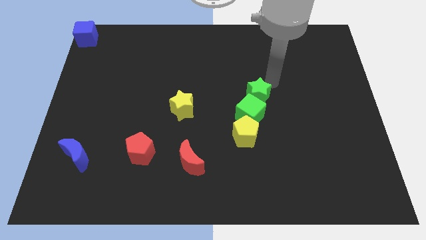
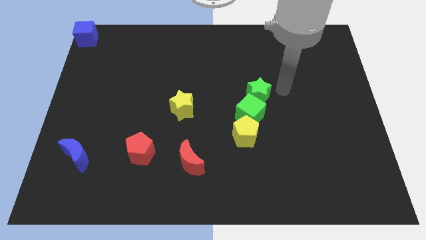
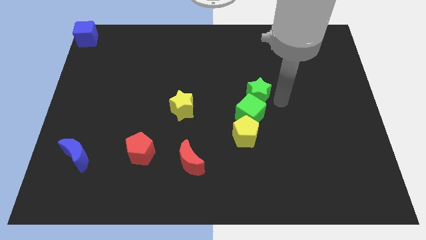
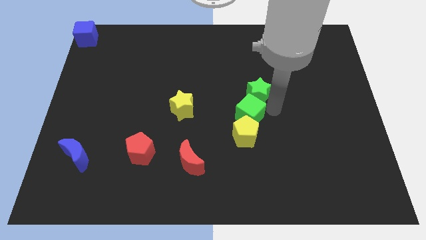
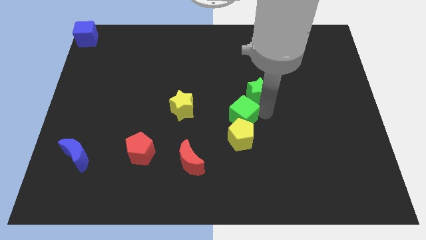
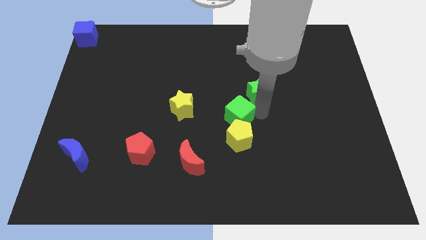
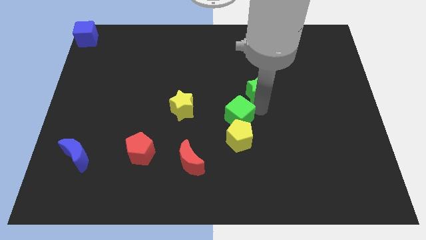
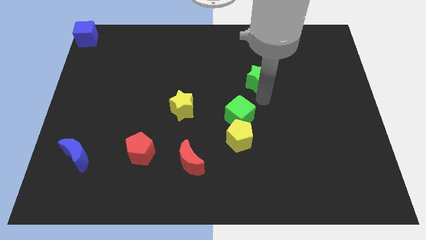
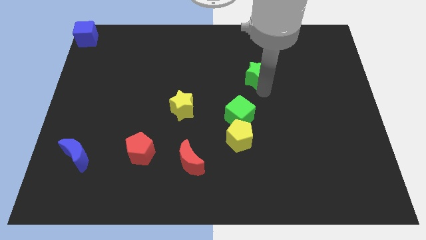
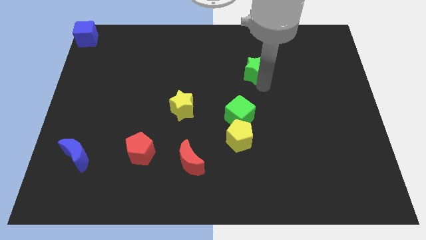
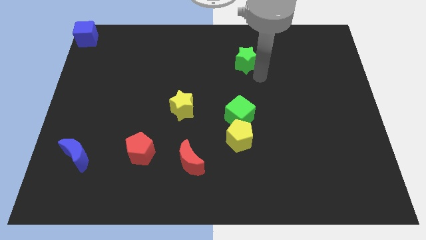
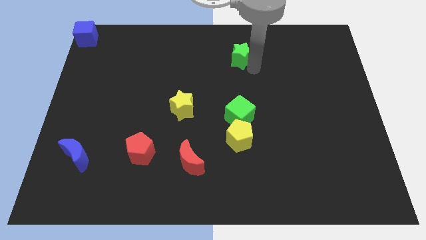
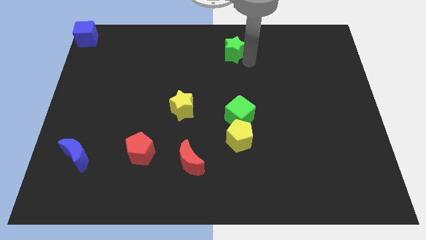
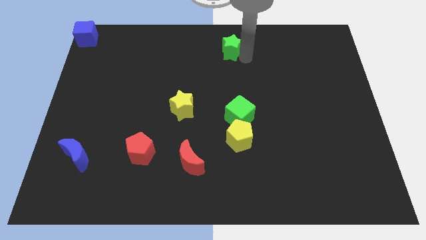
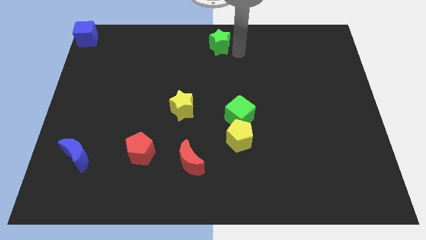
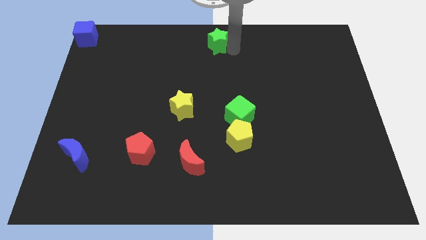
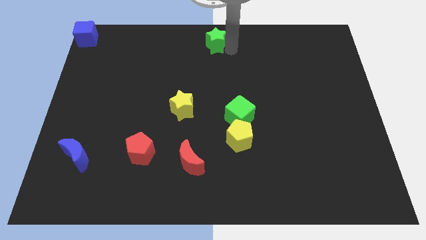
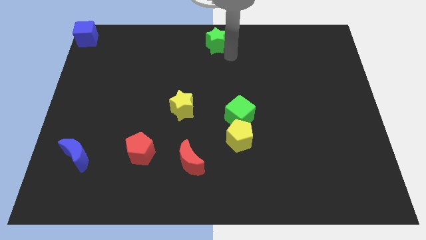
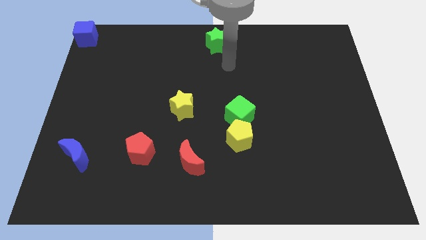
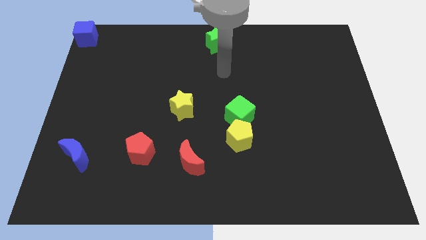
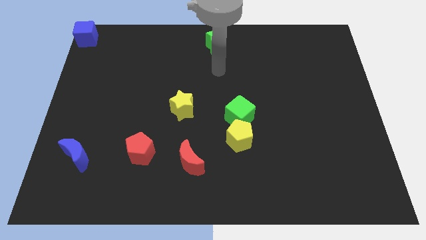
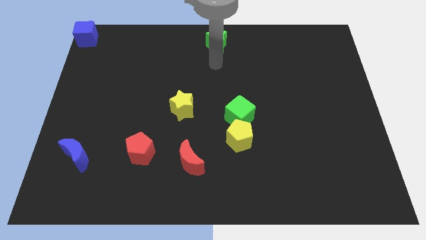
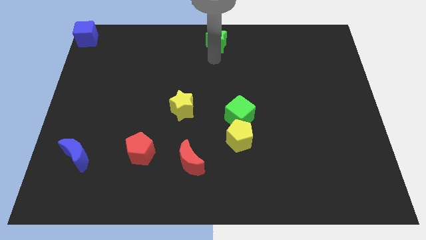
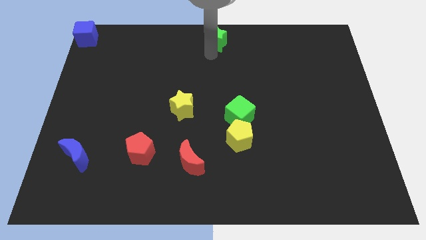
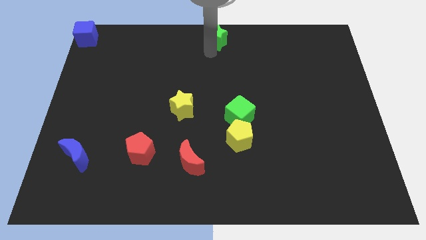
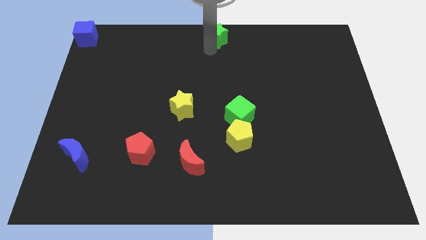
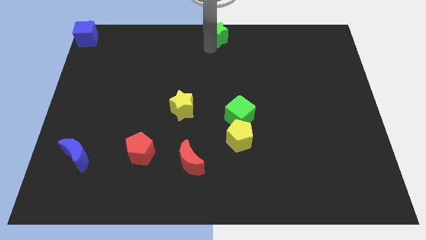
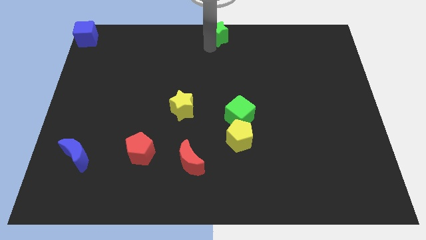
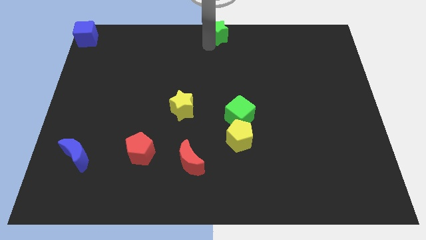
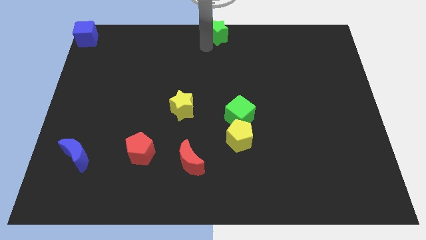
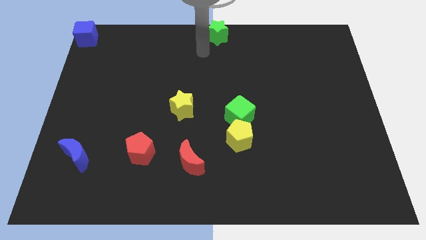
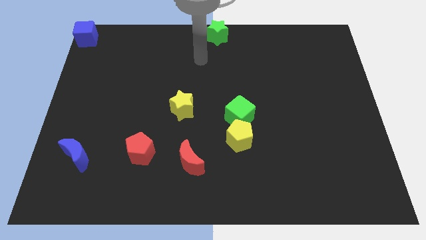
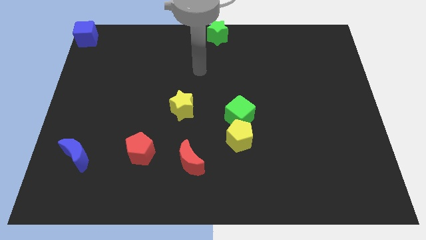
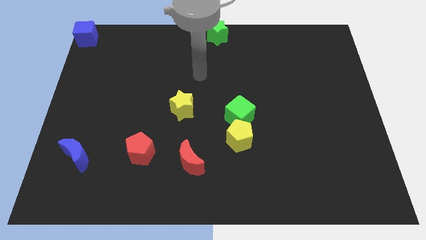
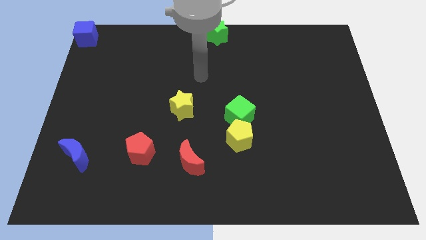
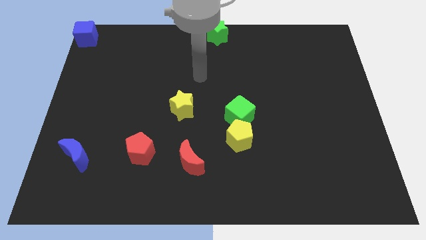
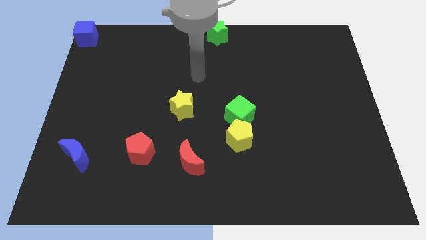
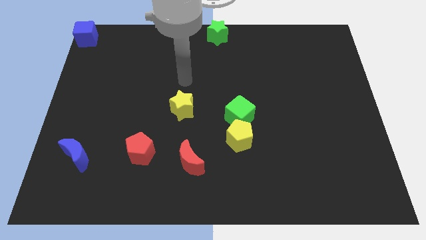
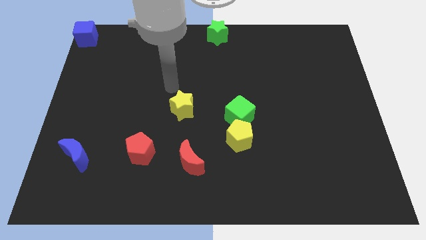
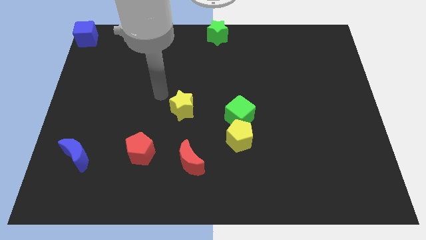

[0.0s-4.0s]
move the green star to the top center of the board

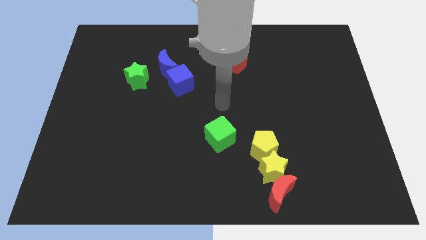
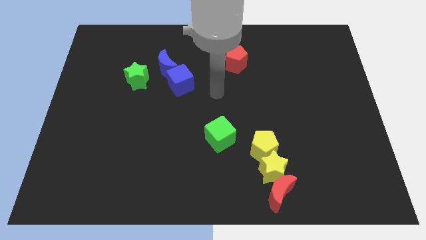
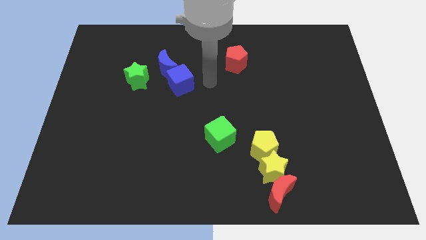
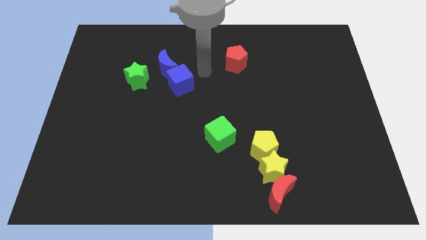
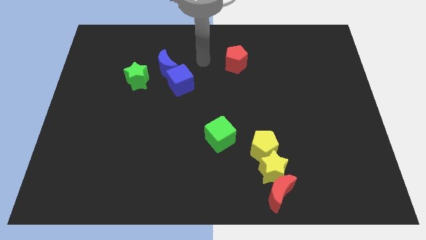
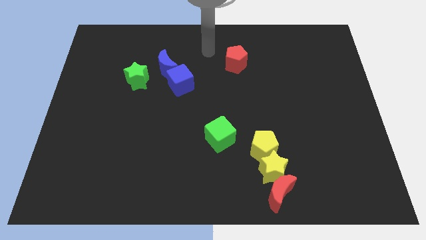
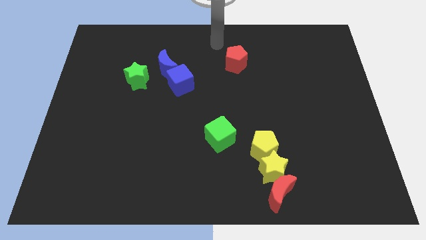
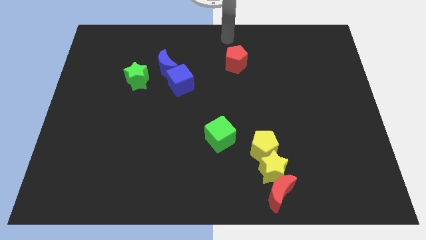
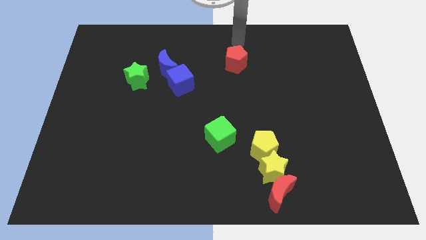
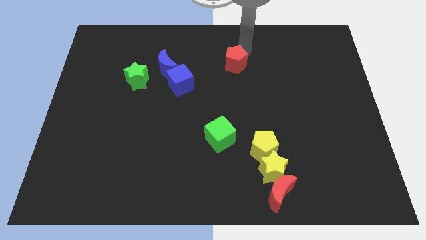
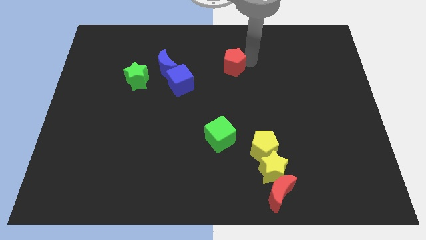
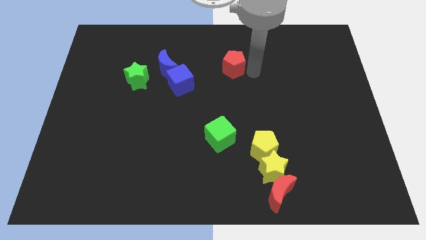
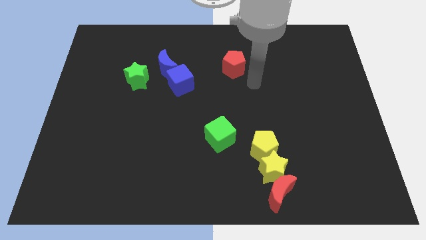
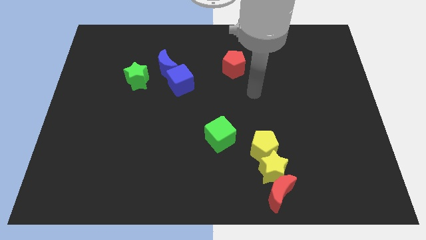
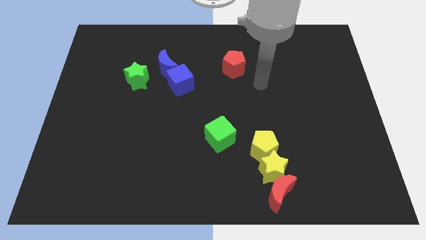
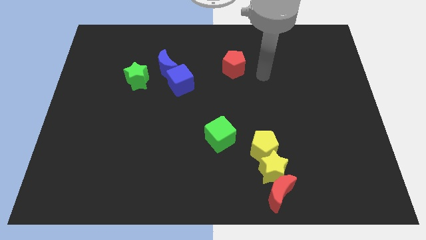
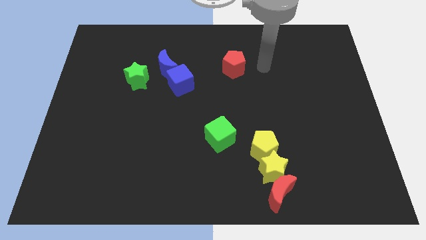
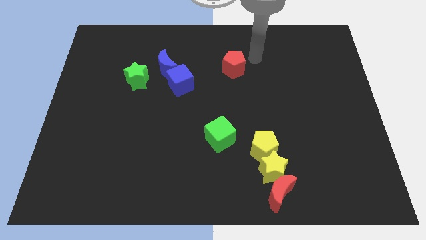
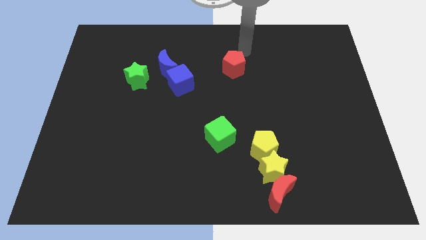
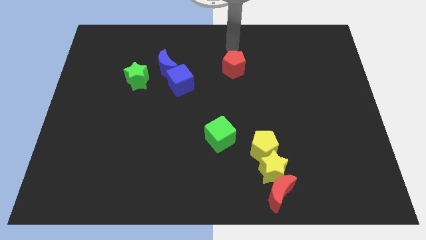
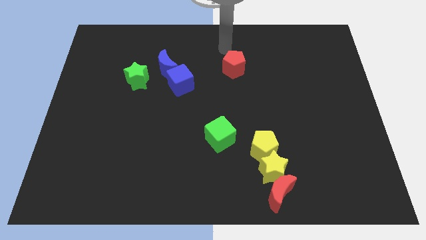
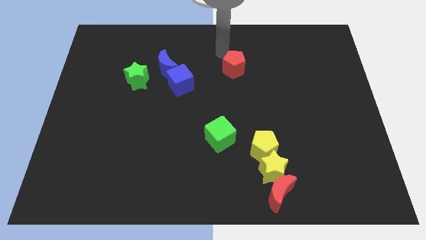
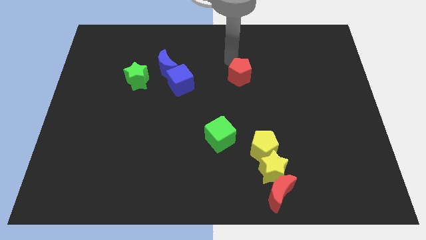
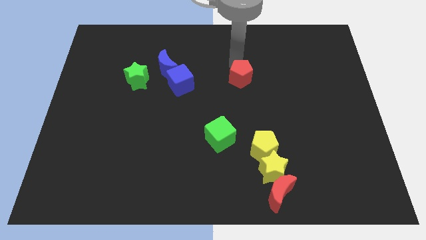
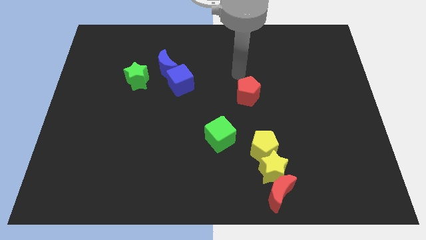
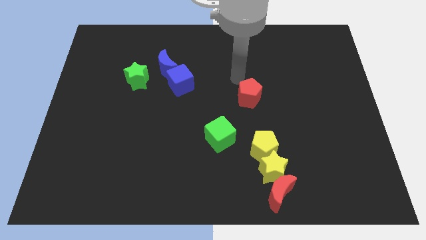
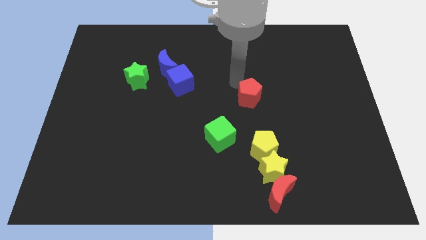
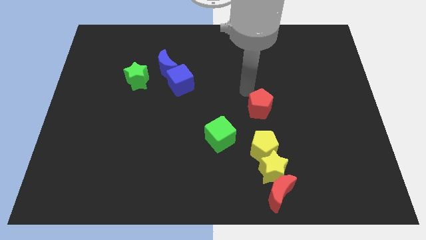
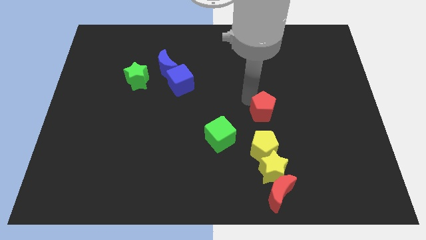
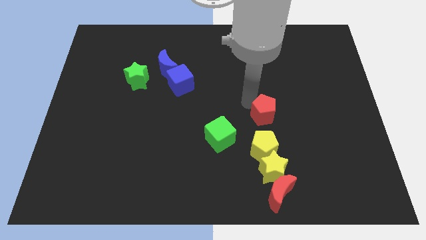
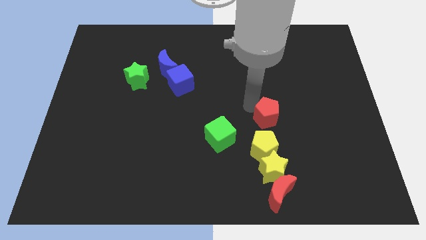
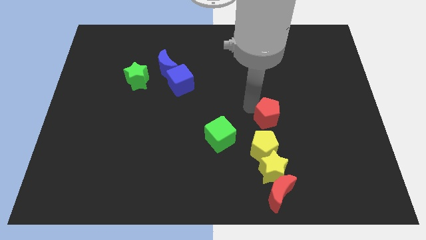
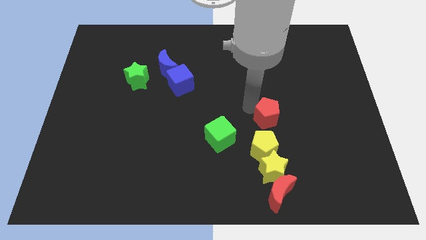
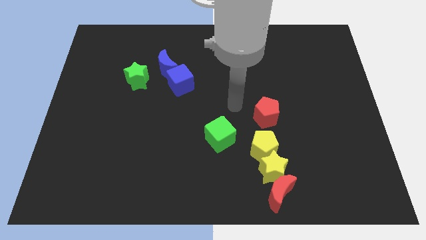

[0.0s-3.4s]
move the red pentagon towards the top of yellow pentagon

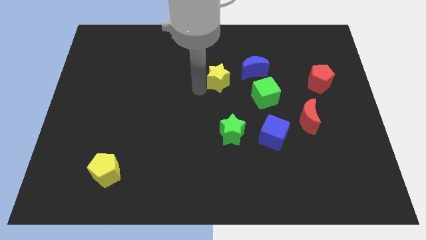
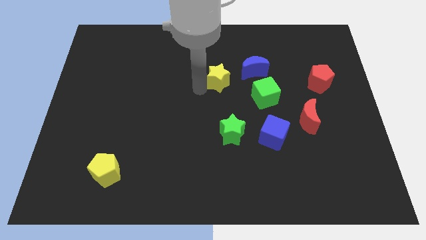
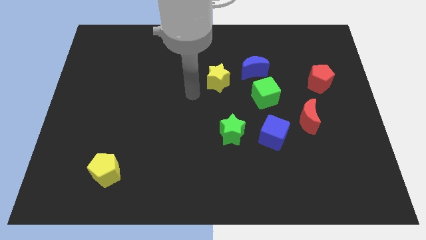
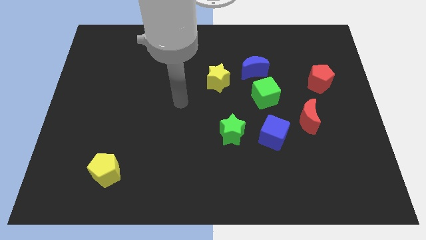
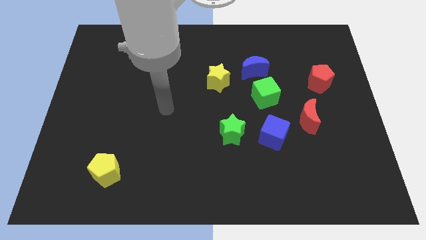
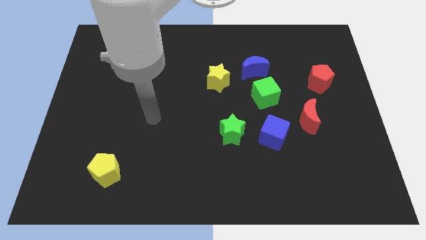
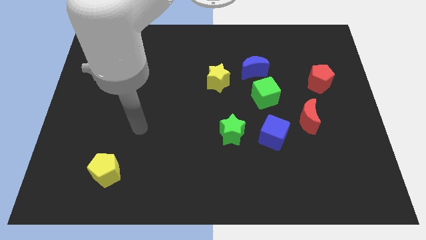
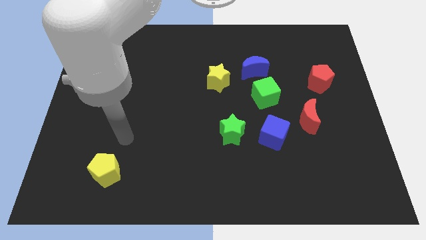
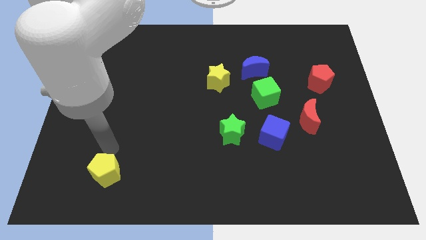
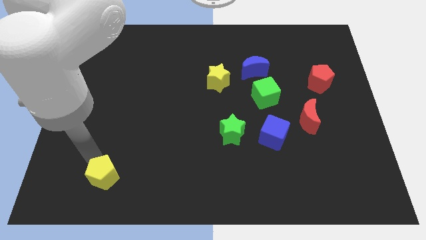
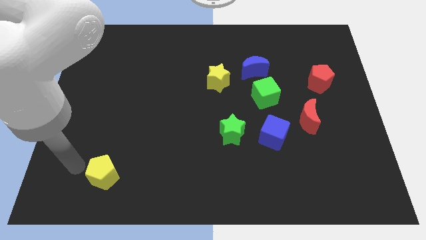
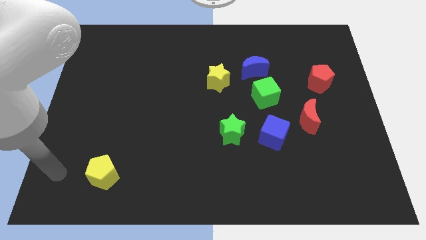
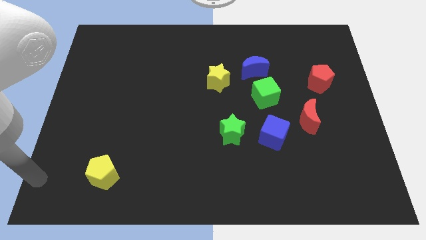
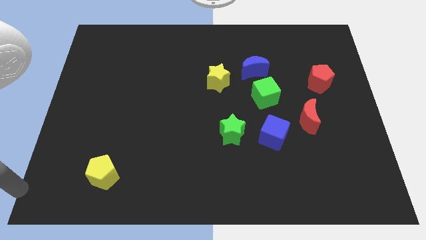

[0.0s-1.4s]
gently tap at the top side of the yellow pentagon
